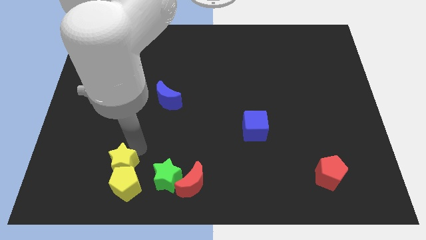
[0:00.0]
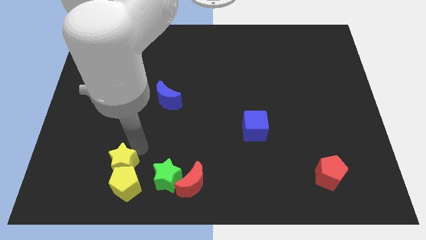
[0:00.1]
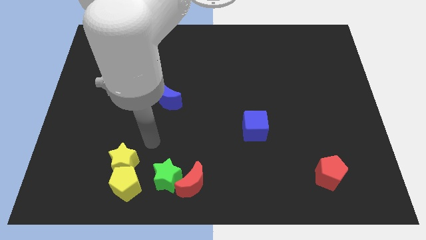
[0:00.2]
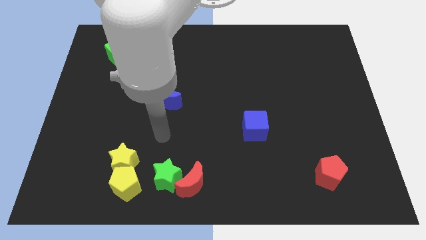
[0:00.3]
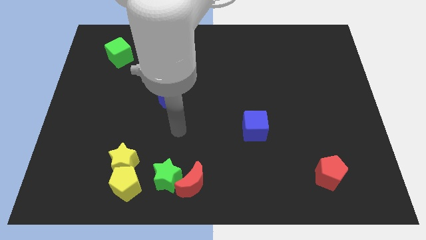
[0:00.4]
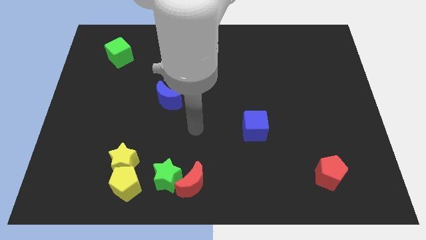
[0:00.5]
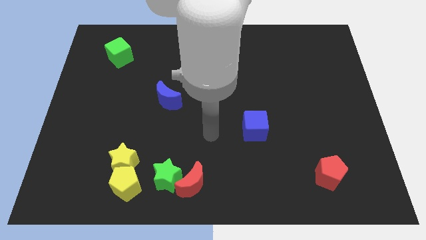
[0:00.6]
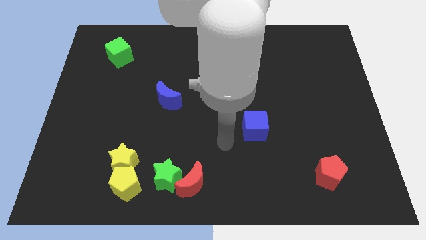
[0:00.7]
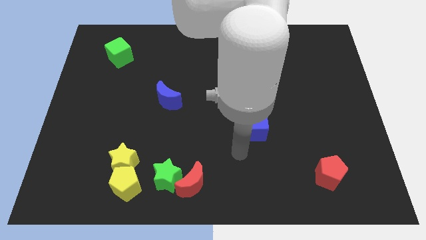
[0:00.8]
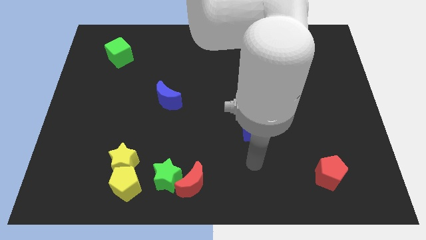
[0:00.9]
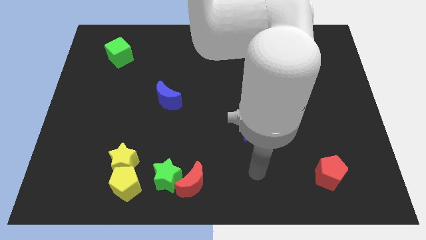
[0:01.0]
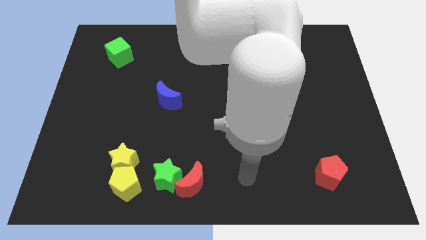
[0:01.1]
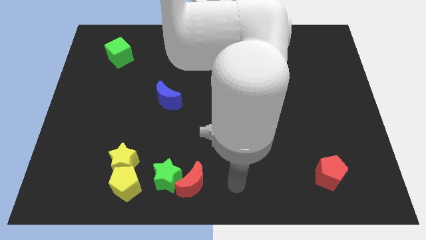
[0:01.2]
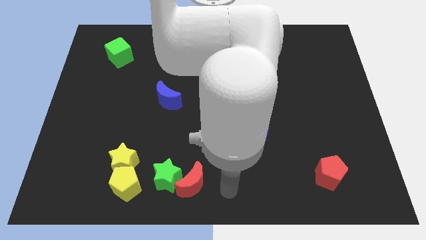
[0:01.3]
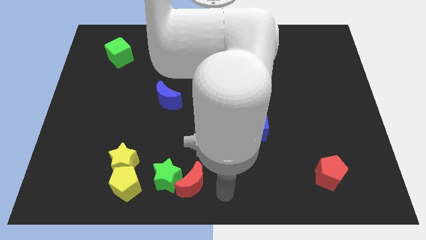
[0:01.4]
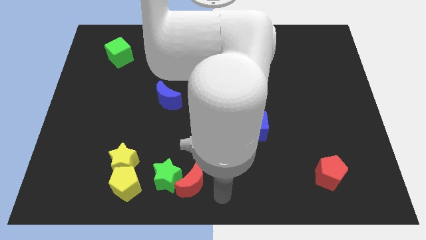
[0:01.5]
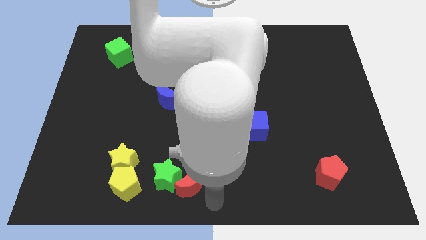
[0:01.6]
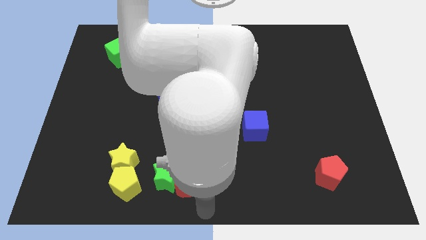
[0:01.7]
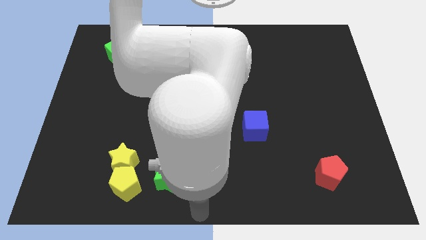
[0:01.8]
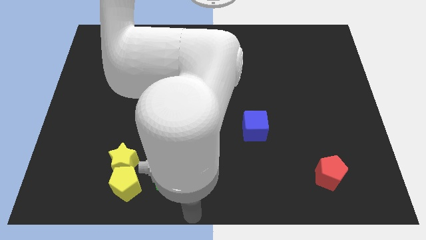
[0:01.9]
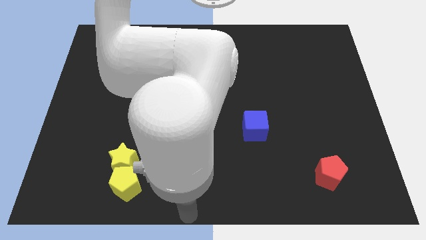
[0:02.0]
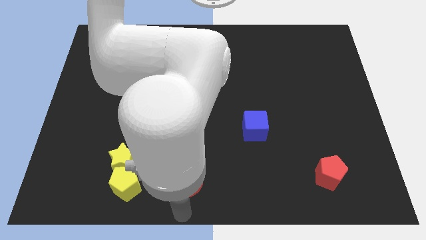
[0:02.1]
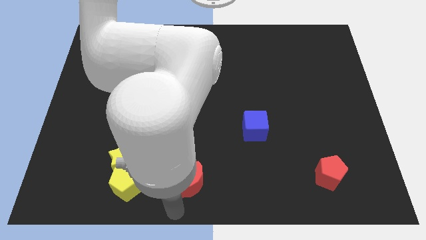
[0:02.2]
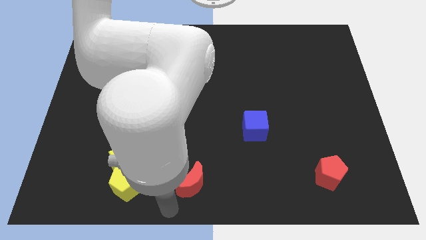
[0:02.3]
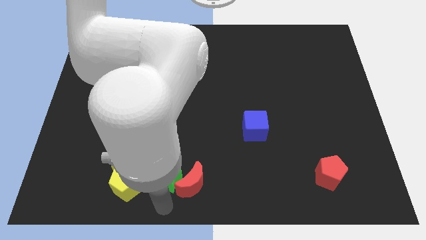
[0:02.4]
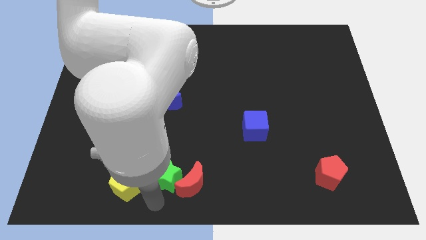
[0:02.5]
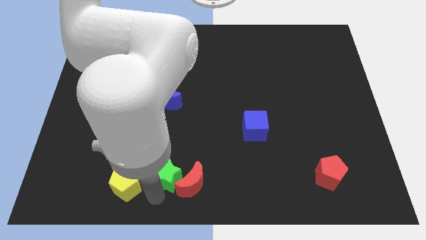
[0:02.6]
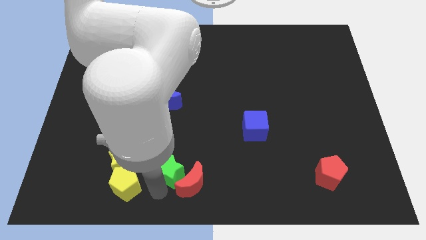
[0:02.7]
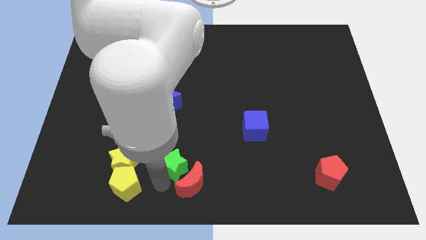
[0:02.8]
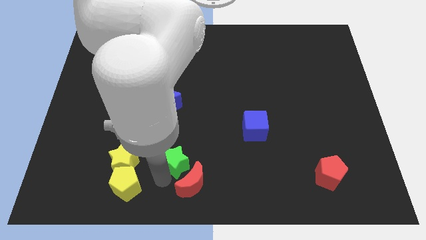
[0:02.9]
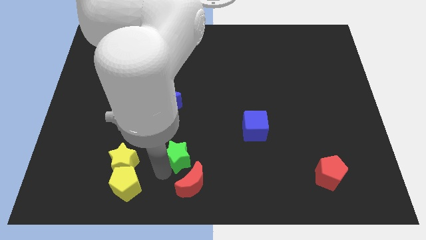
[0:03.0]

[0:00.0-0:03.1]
slightly move the green star up

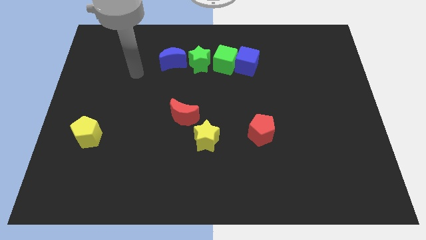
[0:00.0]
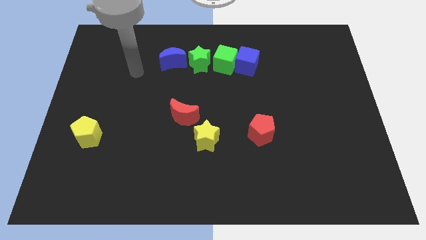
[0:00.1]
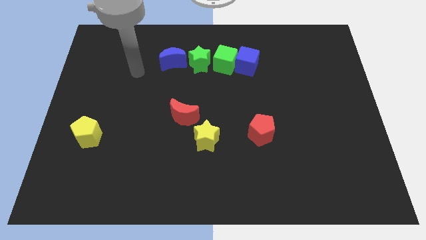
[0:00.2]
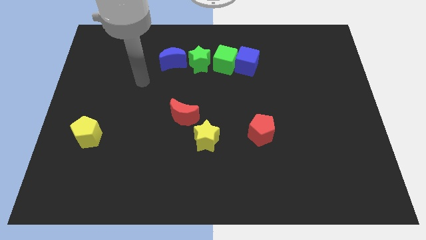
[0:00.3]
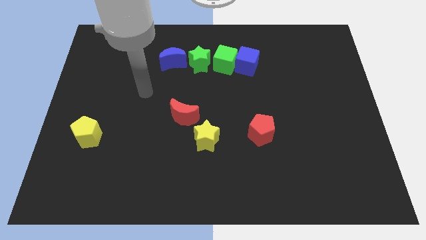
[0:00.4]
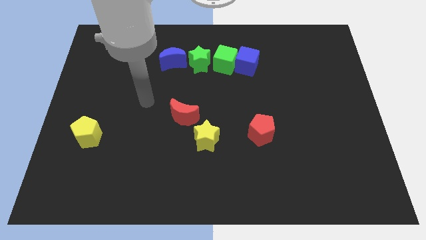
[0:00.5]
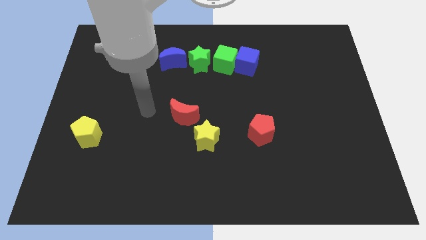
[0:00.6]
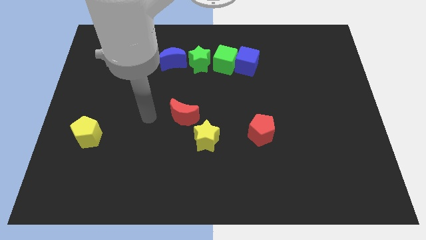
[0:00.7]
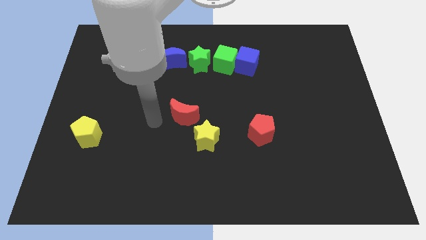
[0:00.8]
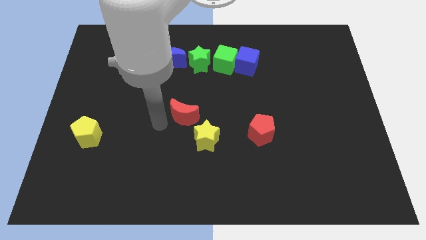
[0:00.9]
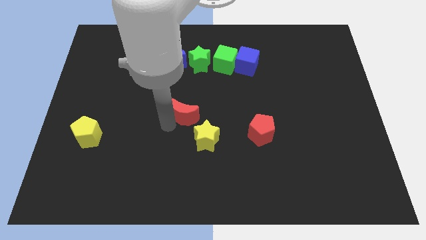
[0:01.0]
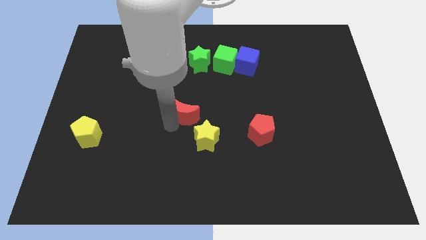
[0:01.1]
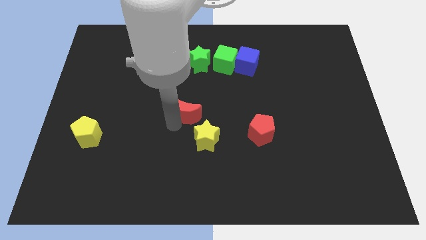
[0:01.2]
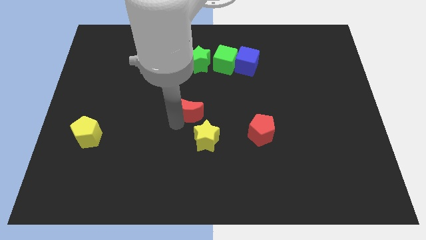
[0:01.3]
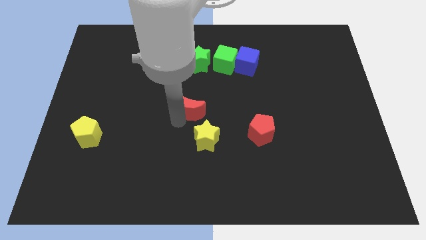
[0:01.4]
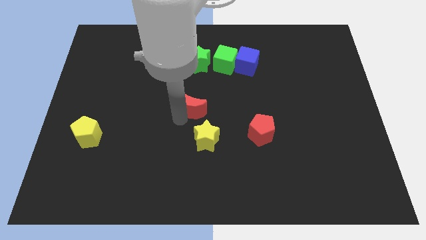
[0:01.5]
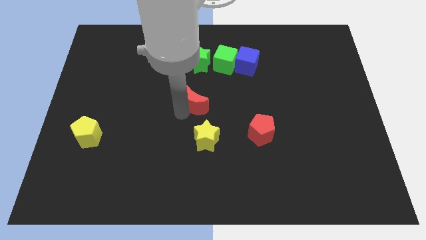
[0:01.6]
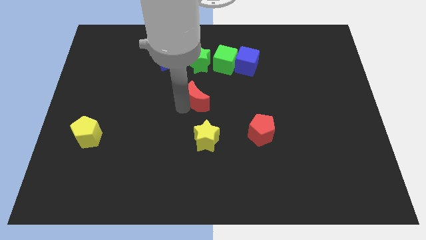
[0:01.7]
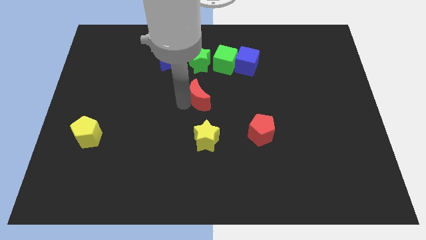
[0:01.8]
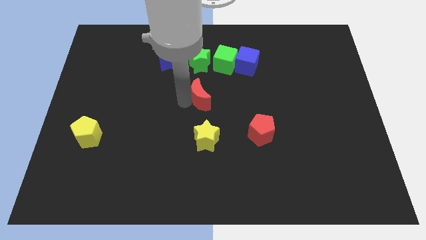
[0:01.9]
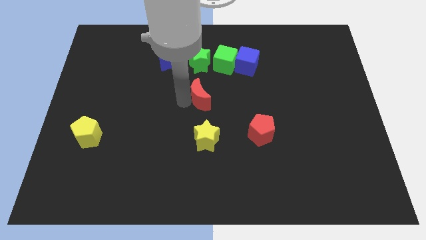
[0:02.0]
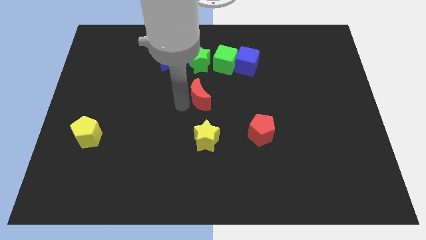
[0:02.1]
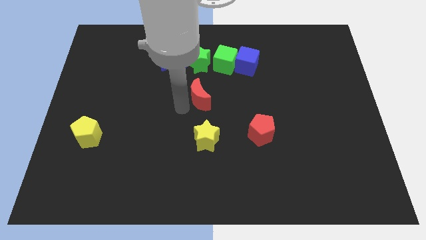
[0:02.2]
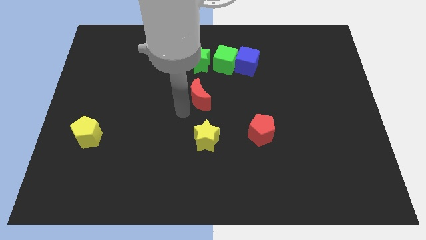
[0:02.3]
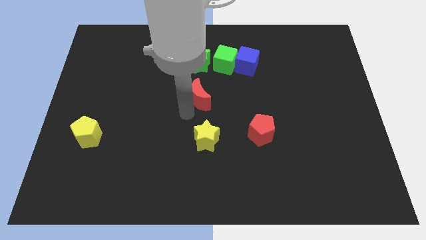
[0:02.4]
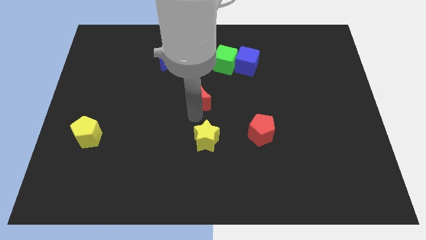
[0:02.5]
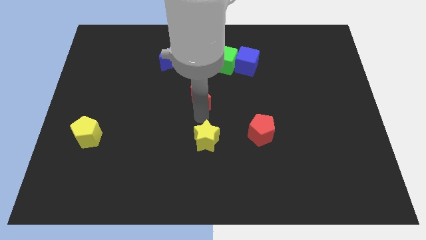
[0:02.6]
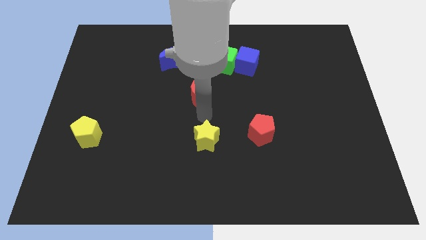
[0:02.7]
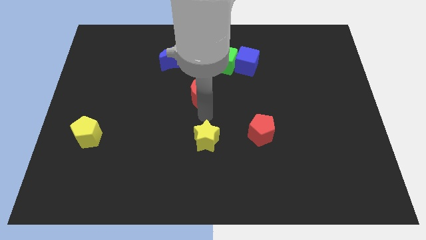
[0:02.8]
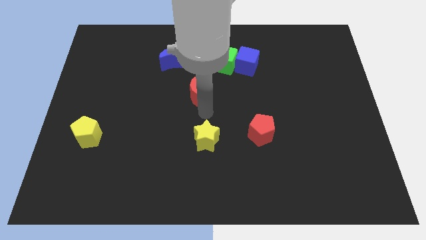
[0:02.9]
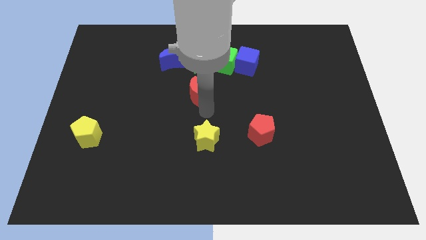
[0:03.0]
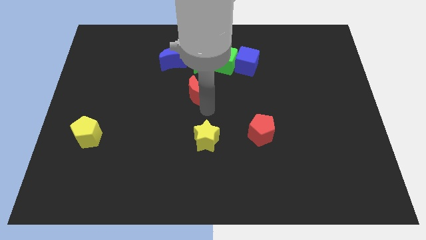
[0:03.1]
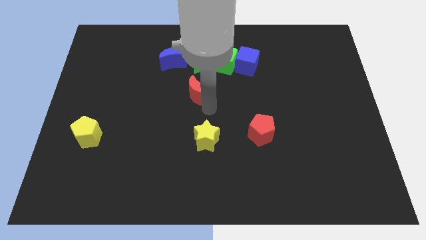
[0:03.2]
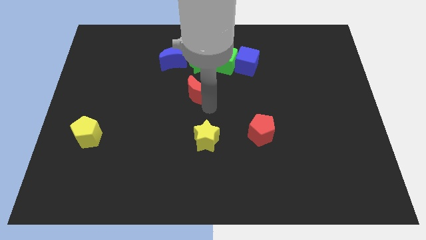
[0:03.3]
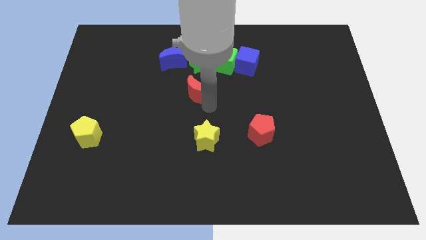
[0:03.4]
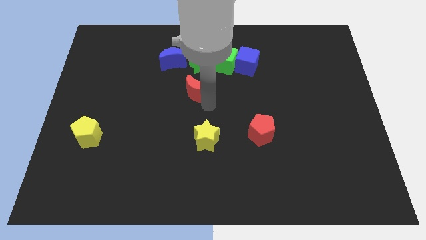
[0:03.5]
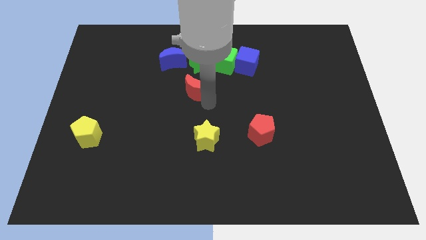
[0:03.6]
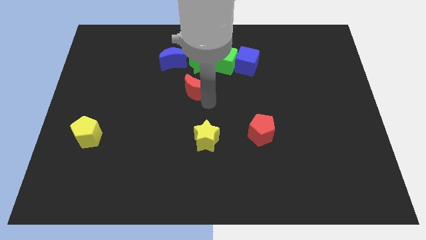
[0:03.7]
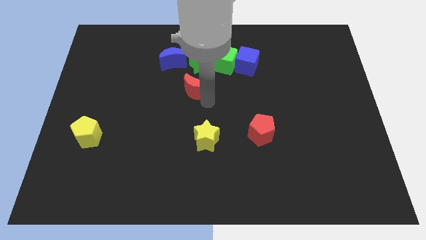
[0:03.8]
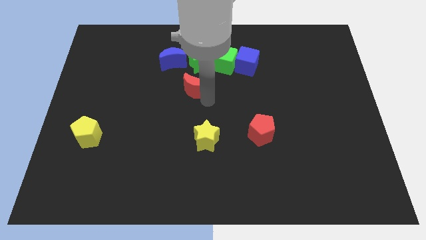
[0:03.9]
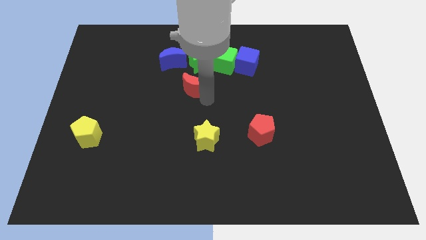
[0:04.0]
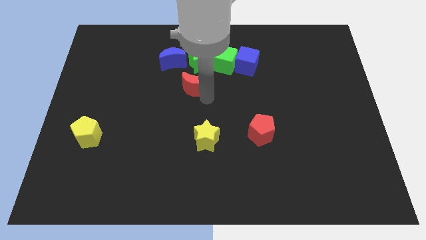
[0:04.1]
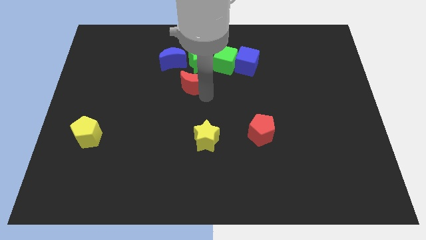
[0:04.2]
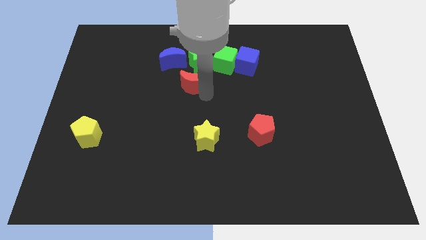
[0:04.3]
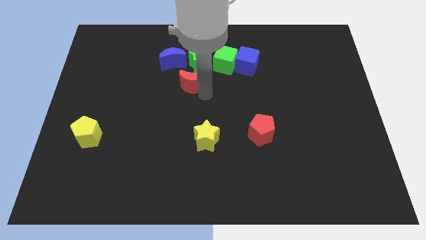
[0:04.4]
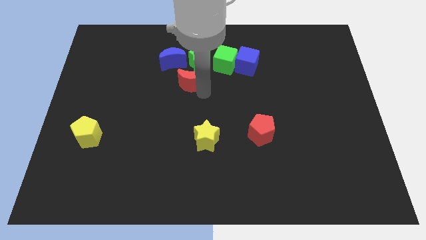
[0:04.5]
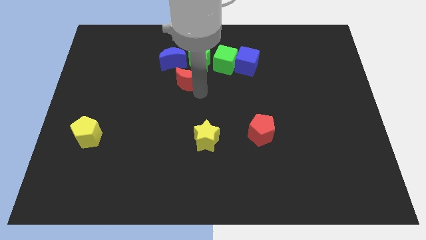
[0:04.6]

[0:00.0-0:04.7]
place the red crescent below the green star

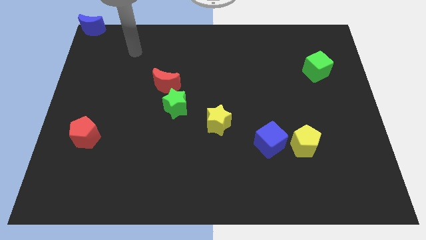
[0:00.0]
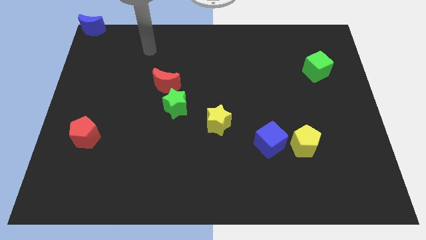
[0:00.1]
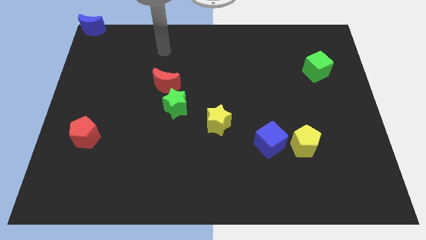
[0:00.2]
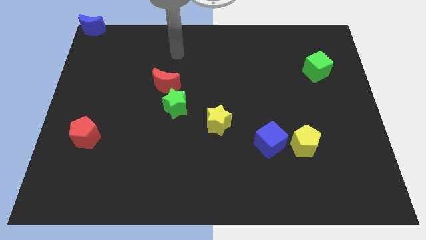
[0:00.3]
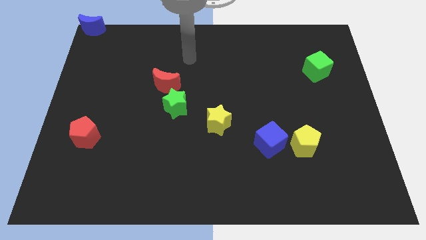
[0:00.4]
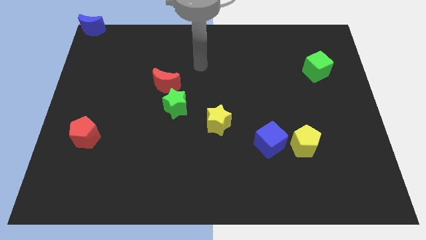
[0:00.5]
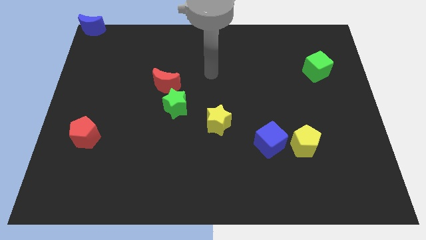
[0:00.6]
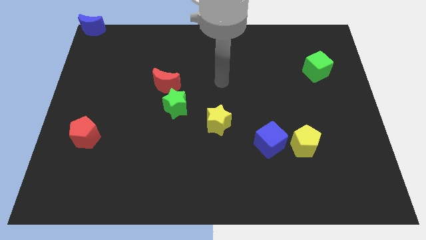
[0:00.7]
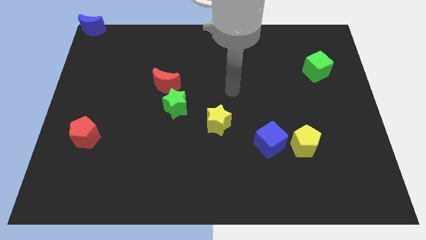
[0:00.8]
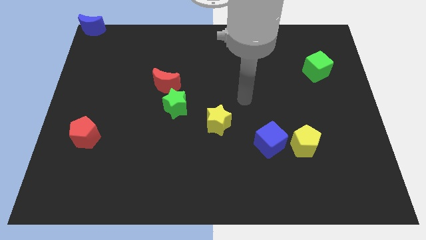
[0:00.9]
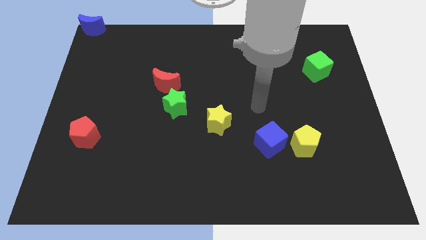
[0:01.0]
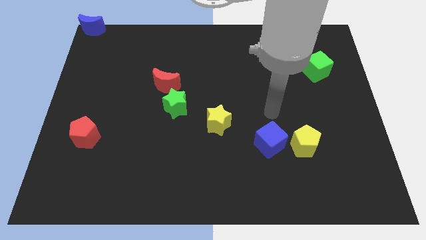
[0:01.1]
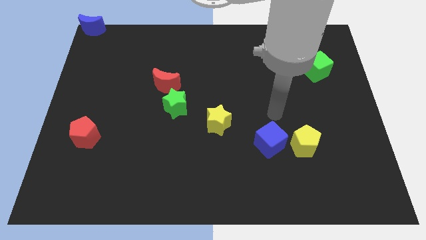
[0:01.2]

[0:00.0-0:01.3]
place your arm to the top of the blue cube
